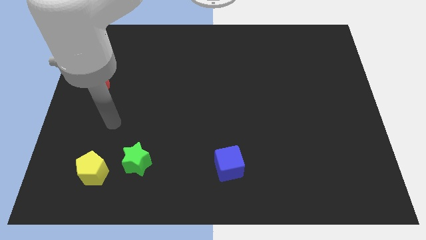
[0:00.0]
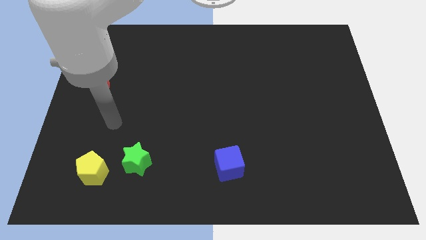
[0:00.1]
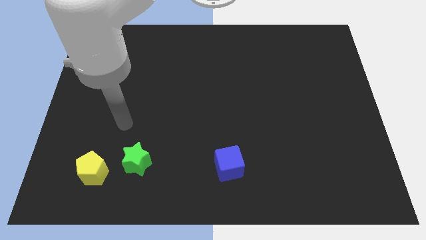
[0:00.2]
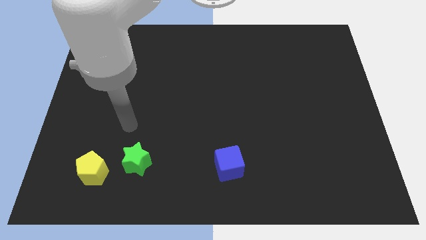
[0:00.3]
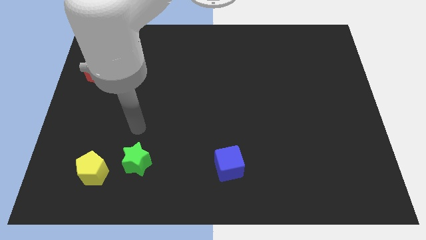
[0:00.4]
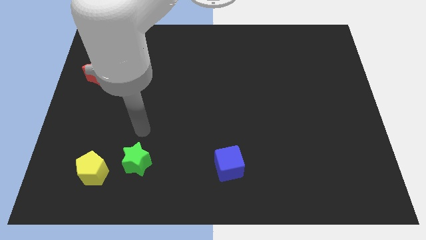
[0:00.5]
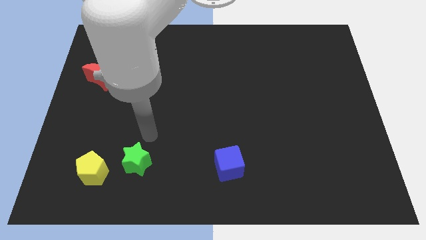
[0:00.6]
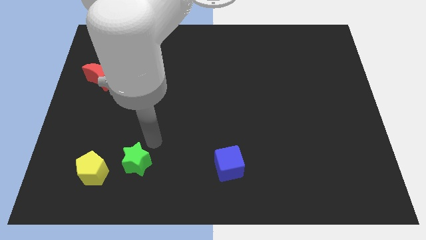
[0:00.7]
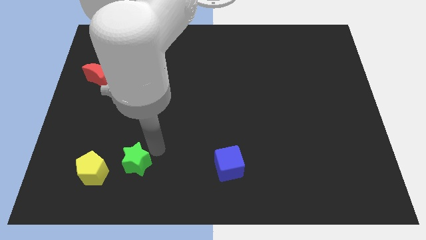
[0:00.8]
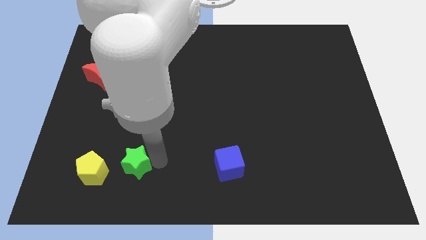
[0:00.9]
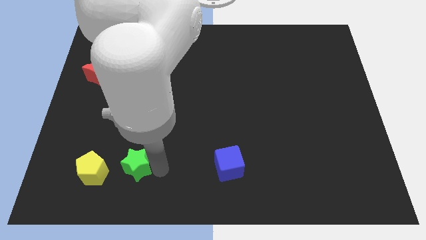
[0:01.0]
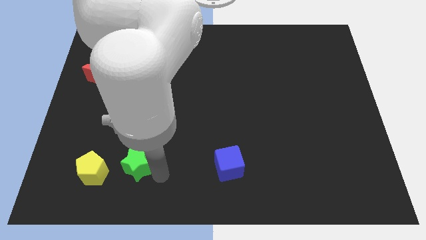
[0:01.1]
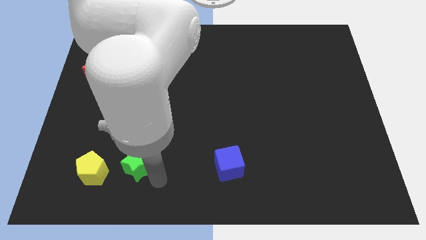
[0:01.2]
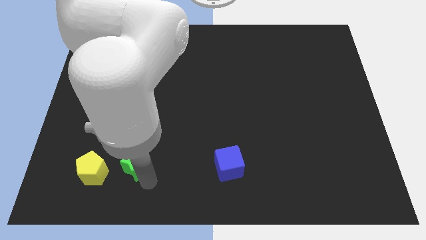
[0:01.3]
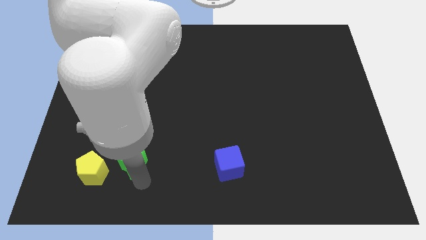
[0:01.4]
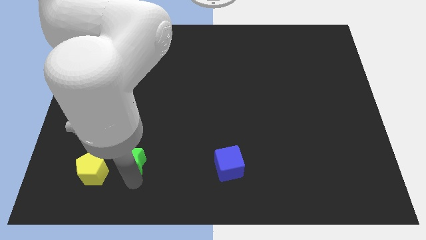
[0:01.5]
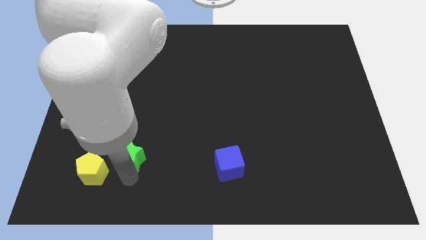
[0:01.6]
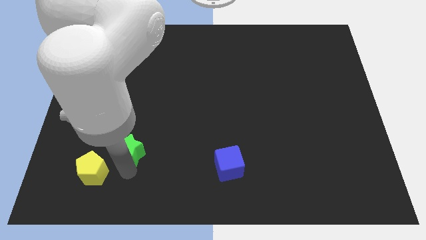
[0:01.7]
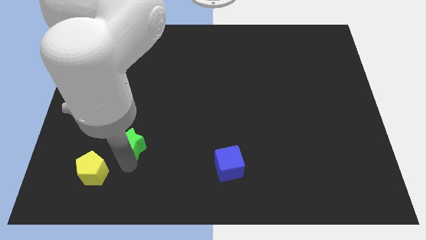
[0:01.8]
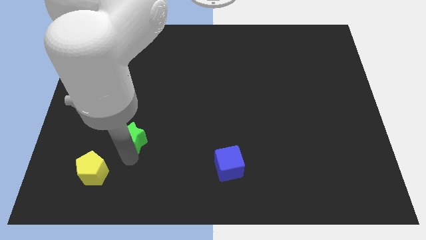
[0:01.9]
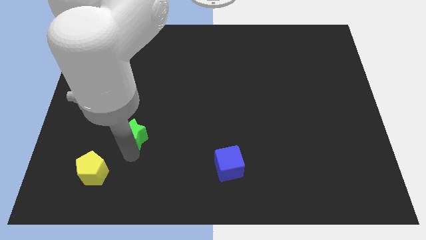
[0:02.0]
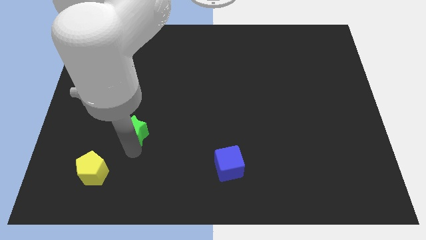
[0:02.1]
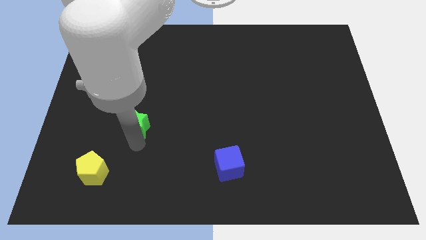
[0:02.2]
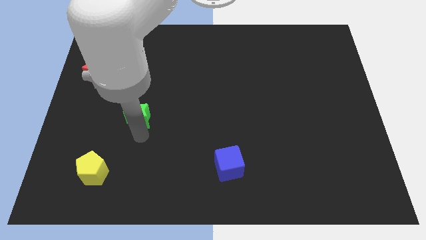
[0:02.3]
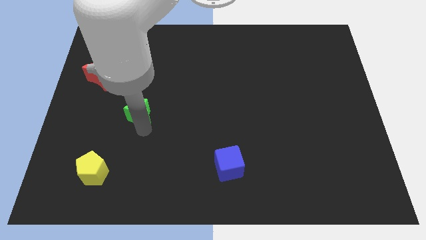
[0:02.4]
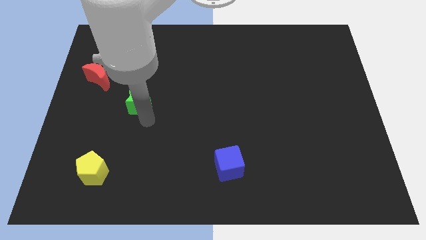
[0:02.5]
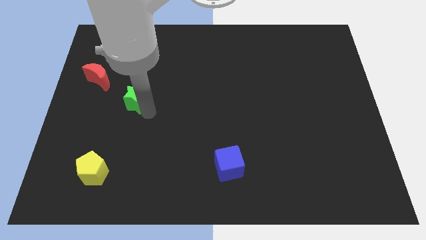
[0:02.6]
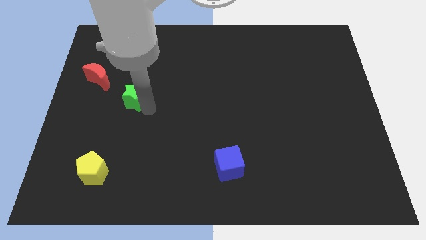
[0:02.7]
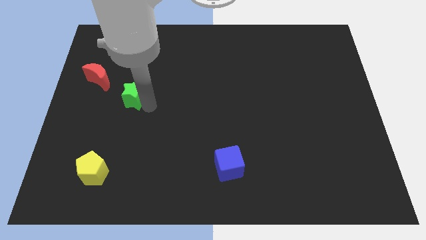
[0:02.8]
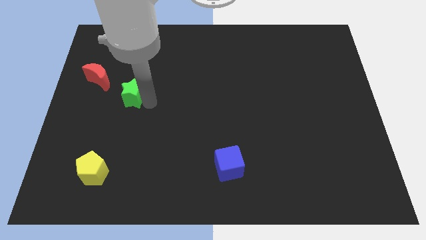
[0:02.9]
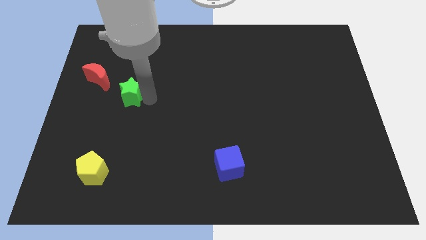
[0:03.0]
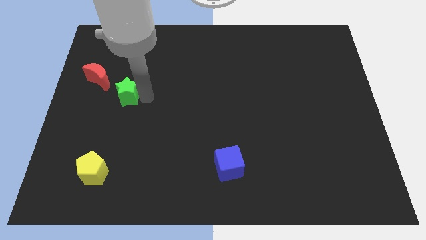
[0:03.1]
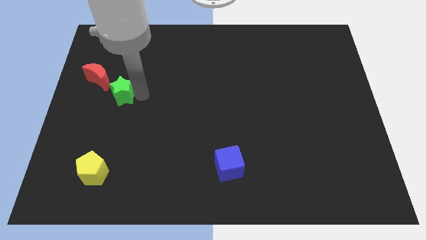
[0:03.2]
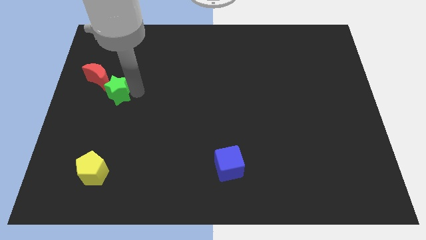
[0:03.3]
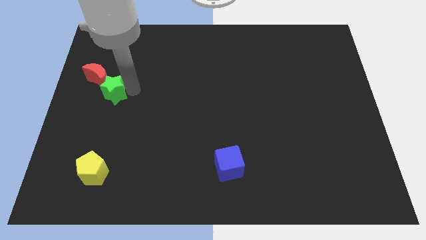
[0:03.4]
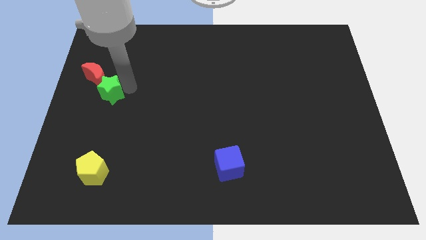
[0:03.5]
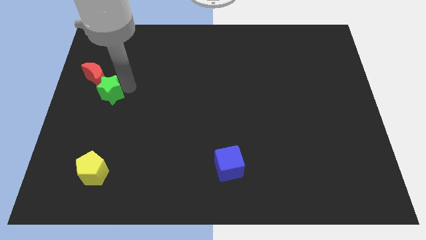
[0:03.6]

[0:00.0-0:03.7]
push the star next to the red moon

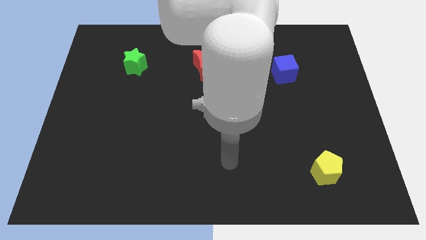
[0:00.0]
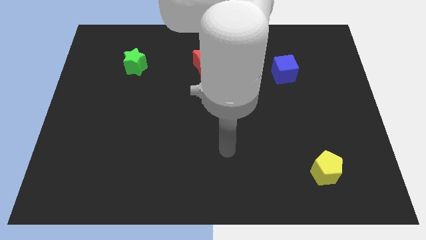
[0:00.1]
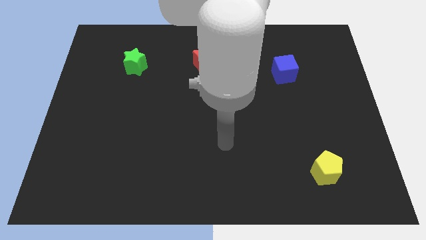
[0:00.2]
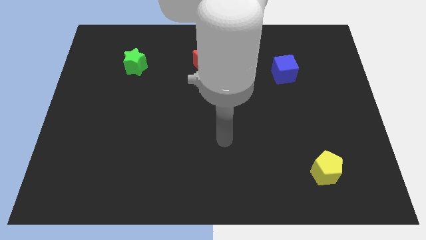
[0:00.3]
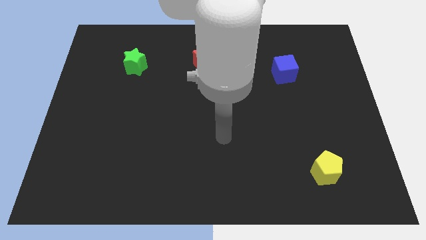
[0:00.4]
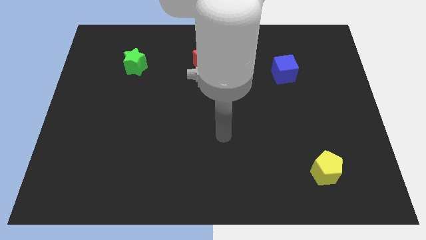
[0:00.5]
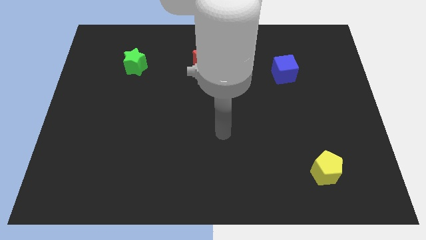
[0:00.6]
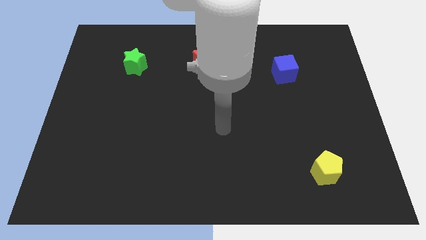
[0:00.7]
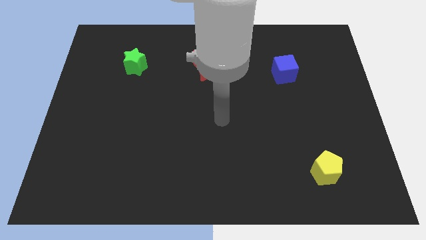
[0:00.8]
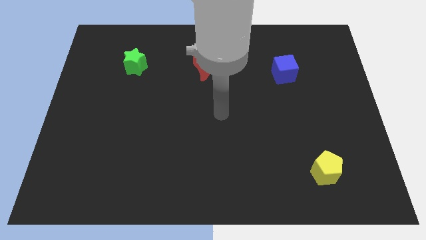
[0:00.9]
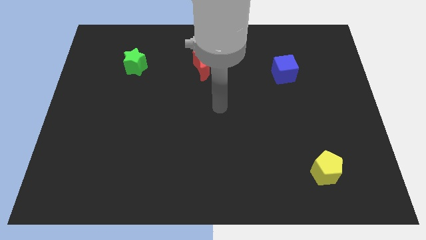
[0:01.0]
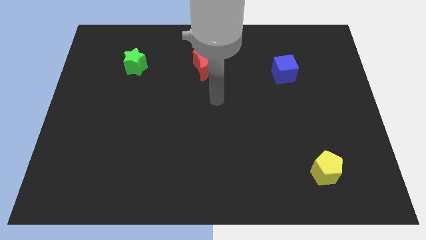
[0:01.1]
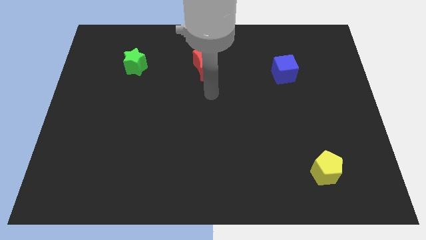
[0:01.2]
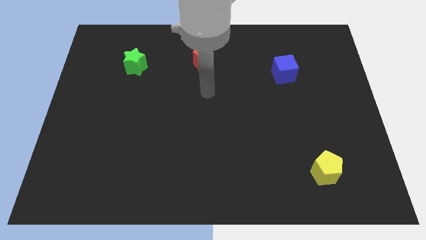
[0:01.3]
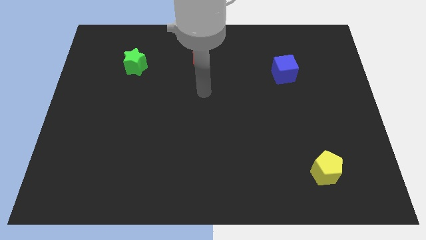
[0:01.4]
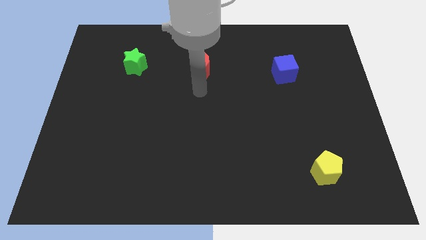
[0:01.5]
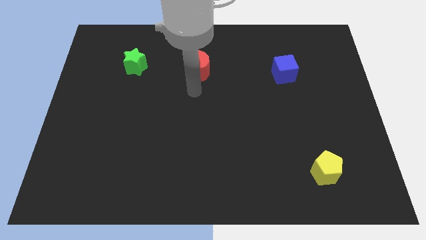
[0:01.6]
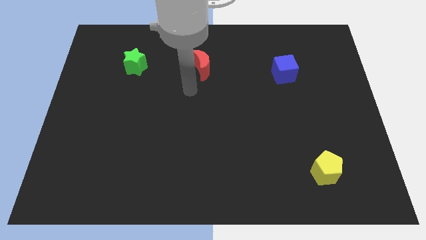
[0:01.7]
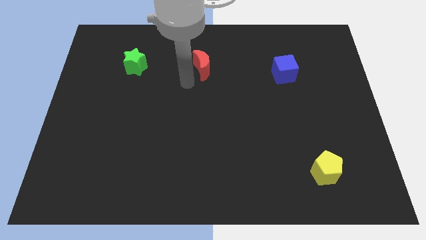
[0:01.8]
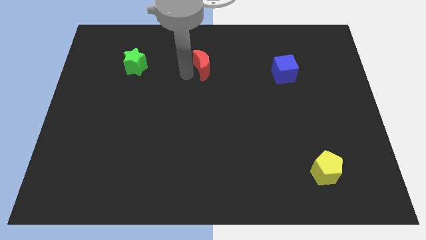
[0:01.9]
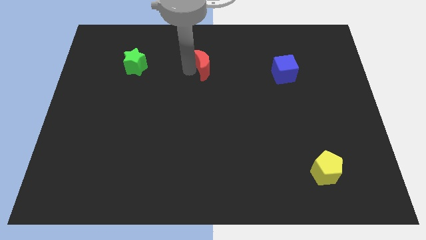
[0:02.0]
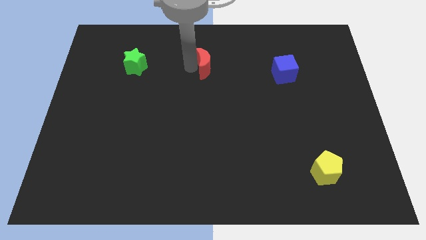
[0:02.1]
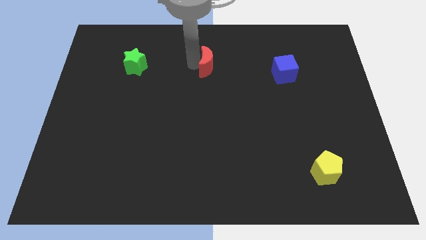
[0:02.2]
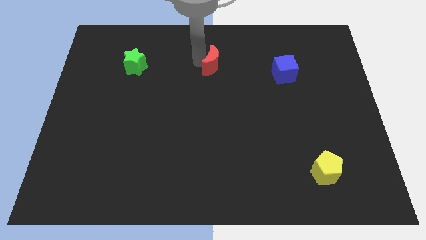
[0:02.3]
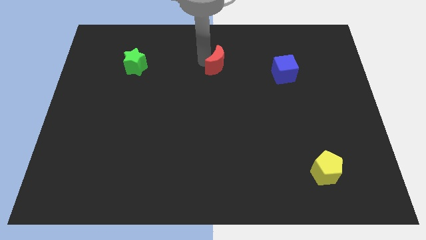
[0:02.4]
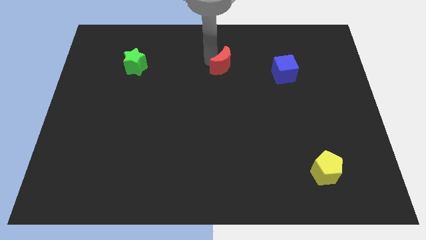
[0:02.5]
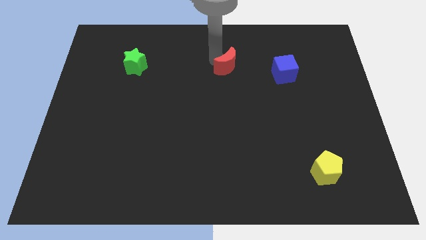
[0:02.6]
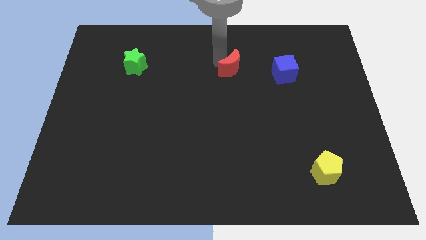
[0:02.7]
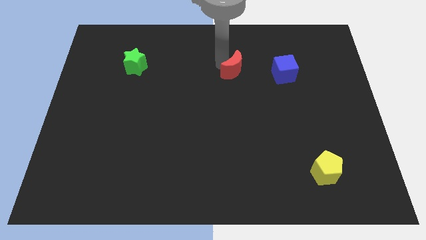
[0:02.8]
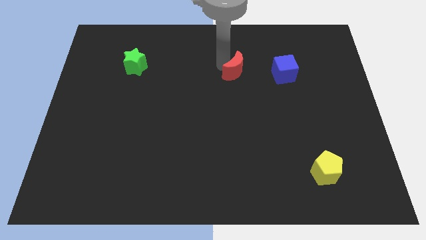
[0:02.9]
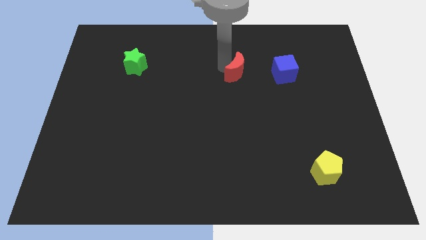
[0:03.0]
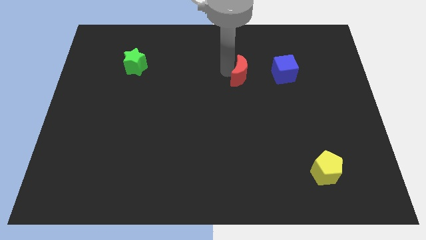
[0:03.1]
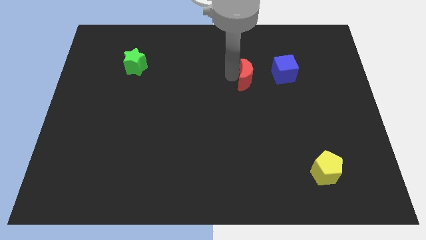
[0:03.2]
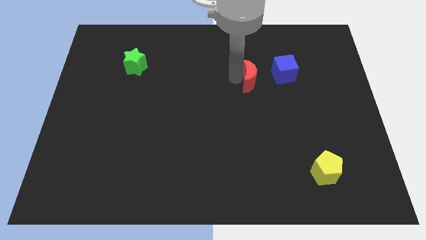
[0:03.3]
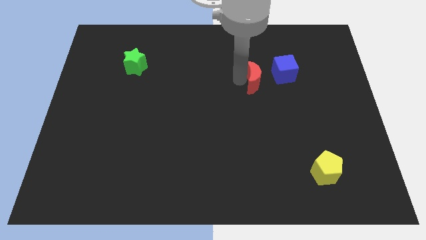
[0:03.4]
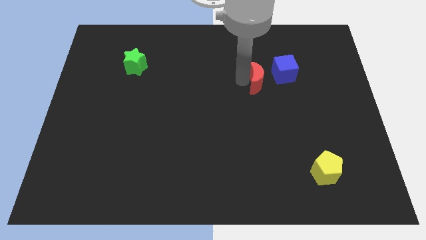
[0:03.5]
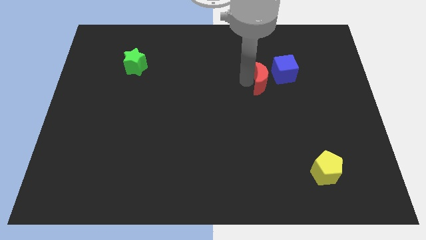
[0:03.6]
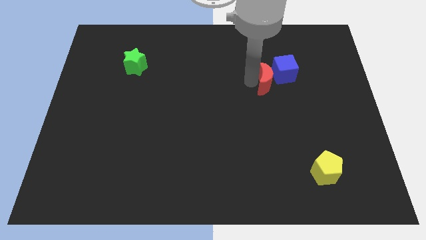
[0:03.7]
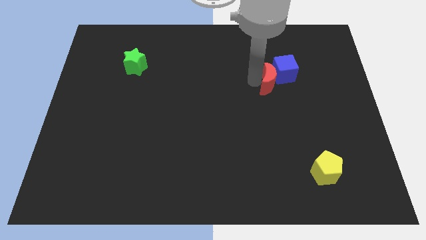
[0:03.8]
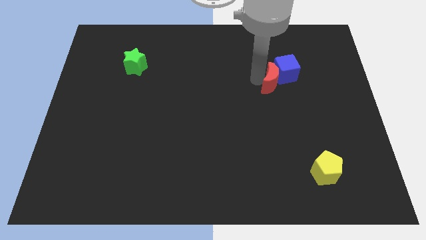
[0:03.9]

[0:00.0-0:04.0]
slide the red block close to the blue cube

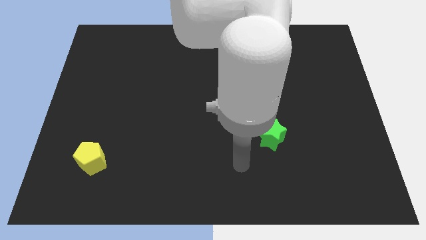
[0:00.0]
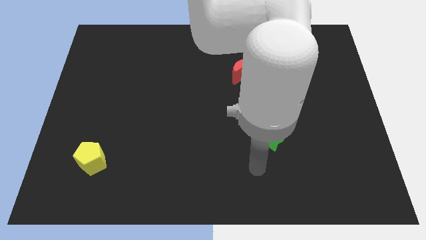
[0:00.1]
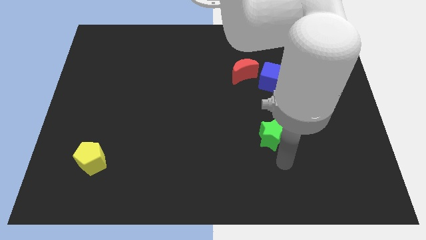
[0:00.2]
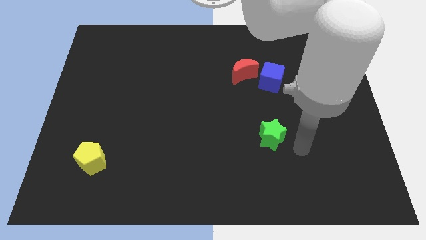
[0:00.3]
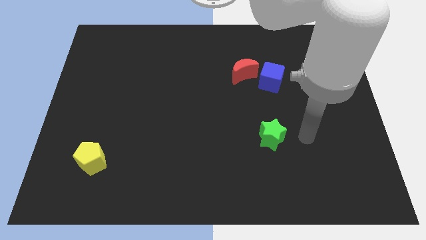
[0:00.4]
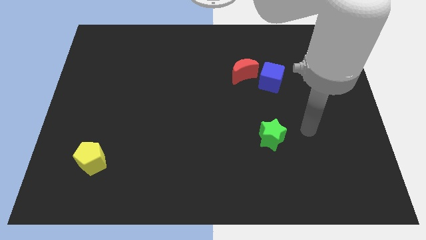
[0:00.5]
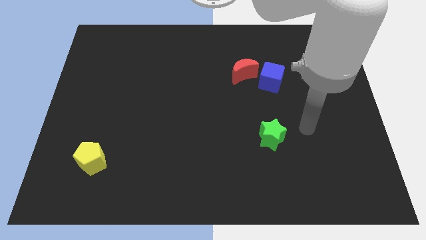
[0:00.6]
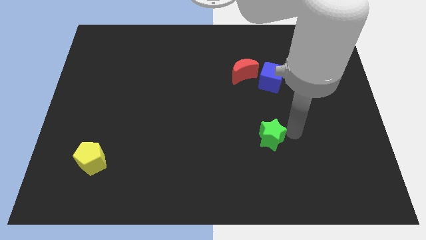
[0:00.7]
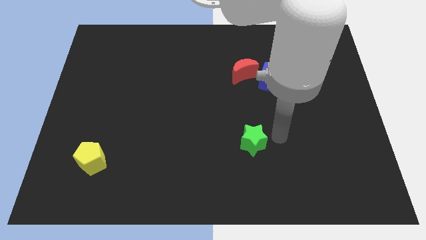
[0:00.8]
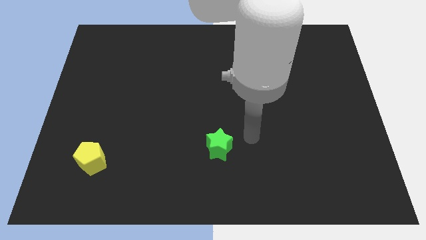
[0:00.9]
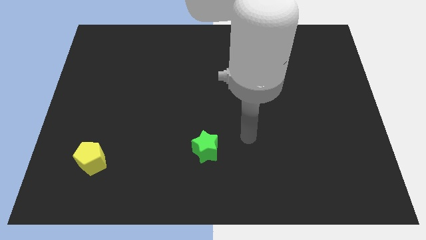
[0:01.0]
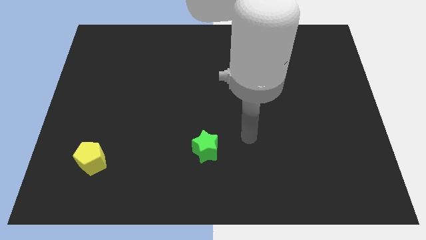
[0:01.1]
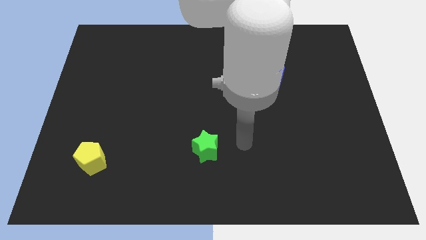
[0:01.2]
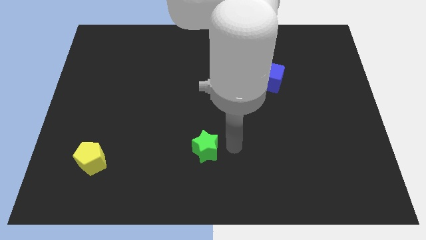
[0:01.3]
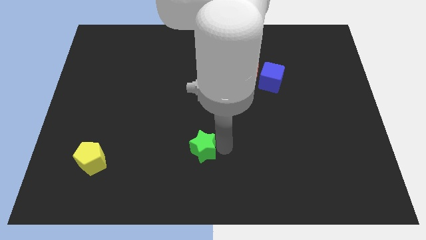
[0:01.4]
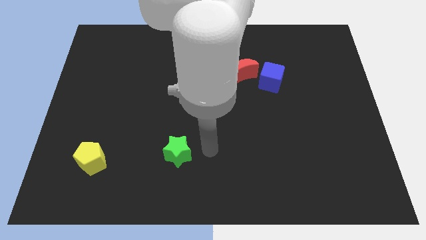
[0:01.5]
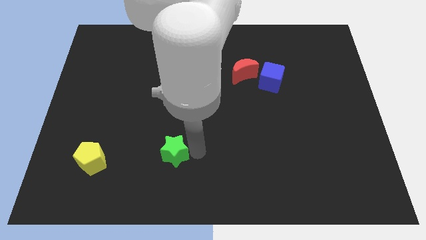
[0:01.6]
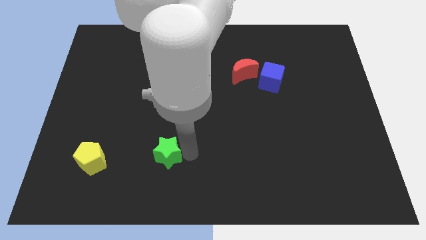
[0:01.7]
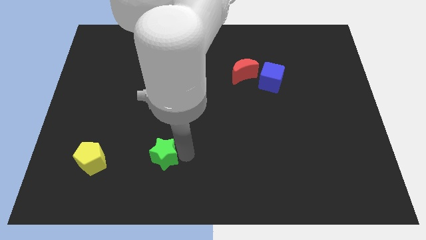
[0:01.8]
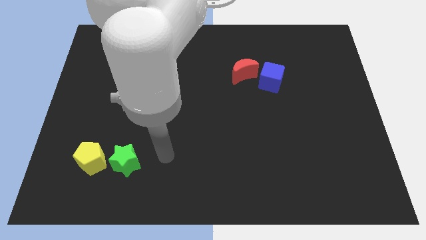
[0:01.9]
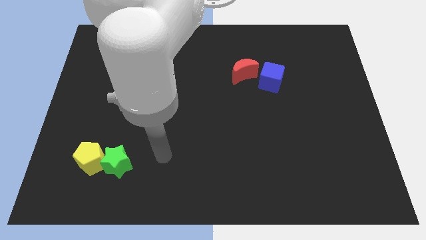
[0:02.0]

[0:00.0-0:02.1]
push the green block next to the yellow pentagon
